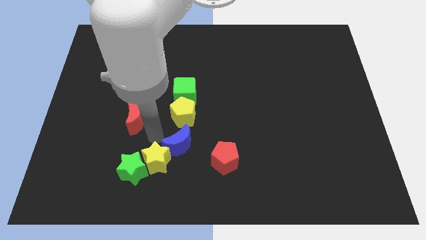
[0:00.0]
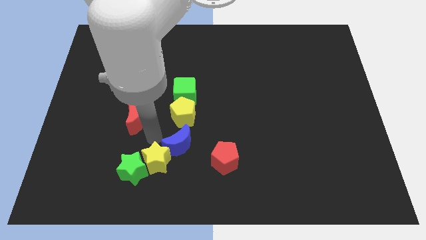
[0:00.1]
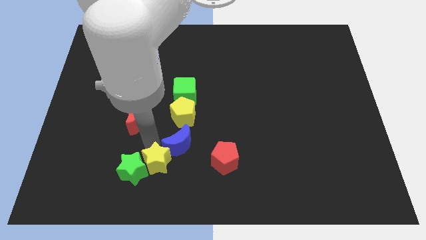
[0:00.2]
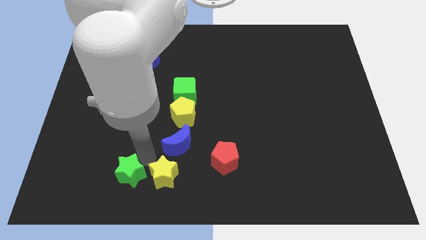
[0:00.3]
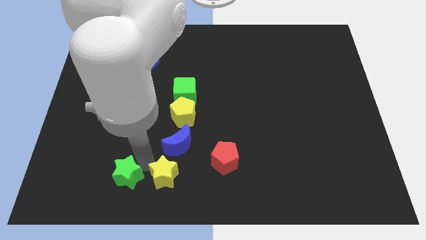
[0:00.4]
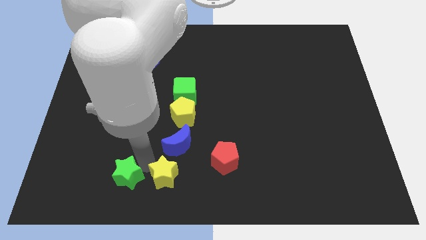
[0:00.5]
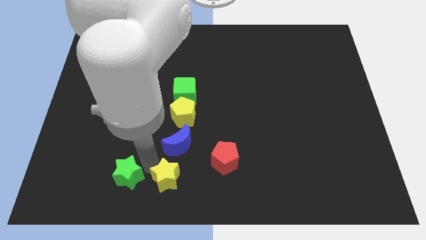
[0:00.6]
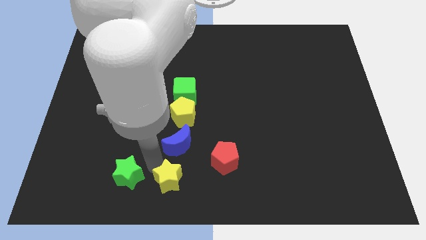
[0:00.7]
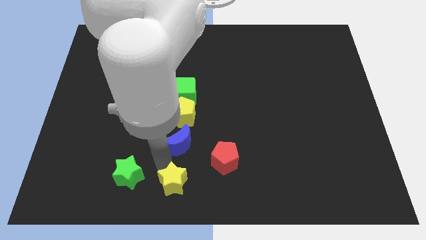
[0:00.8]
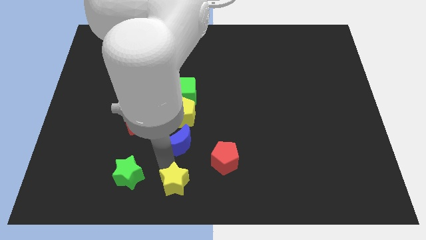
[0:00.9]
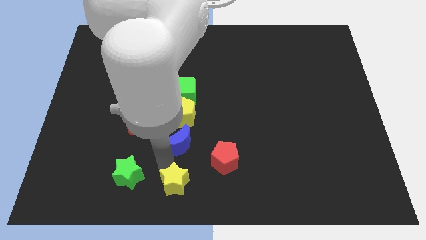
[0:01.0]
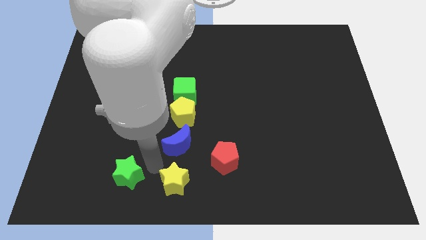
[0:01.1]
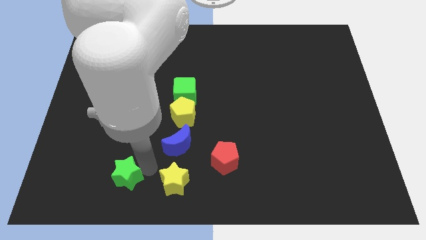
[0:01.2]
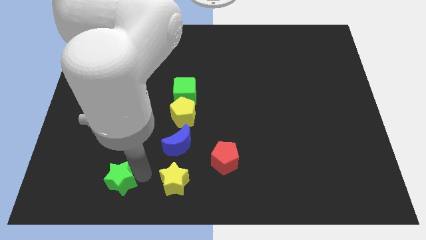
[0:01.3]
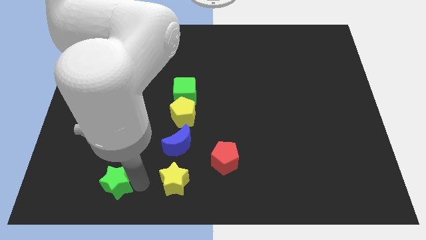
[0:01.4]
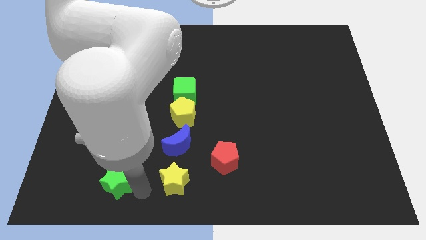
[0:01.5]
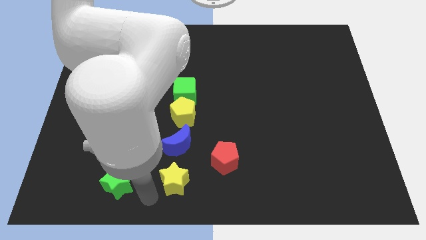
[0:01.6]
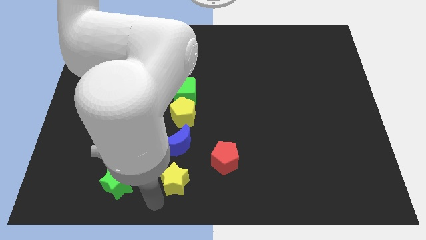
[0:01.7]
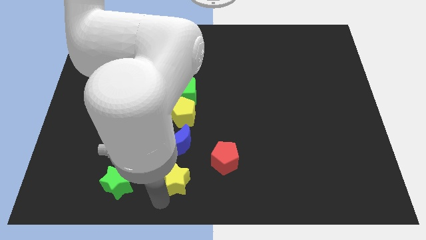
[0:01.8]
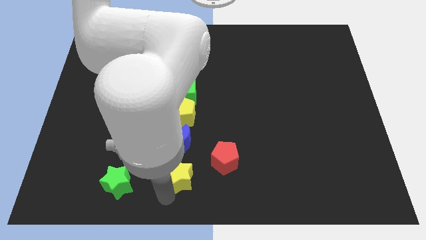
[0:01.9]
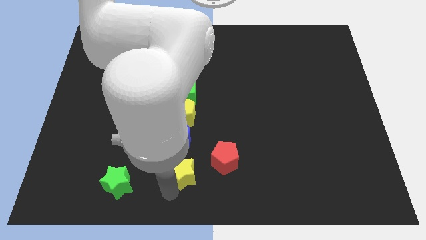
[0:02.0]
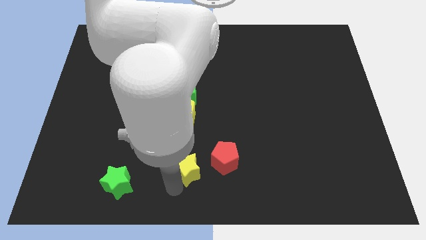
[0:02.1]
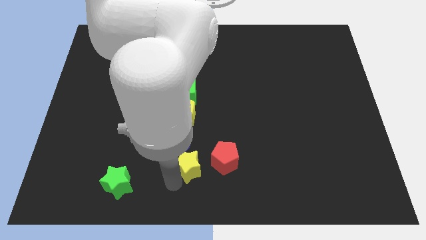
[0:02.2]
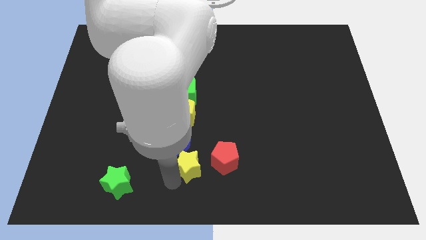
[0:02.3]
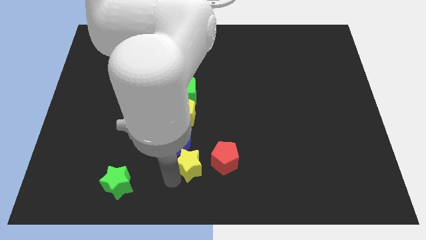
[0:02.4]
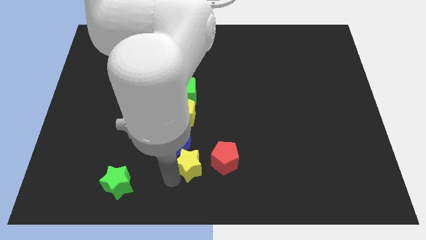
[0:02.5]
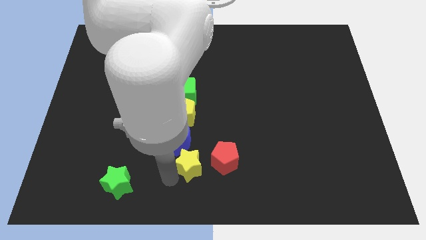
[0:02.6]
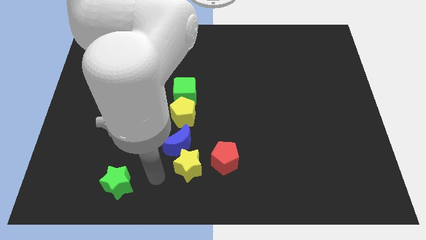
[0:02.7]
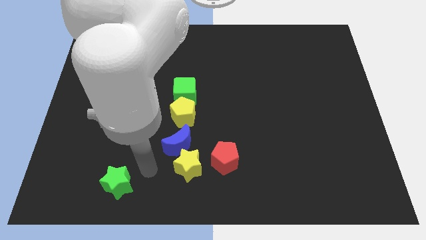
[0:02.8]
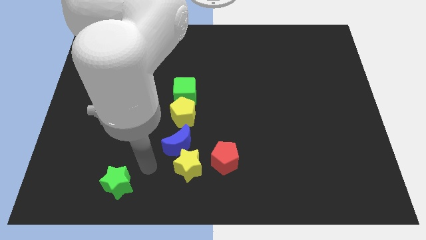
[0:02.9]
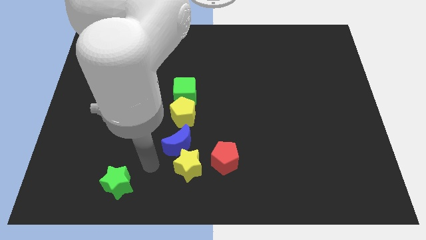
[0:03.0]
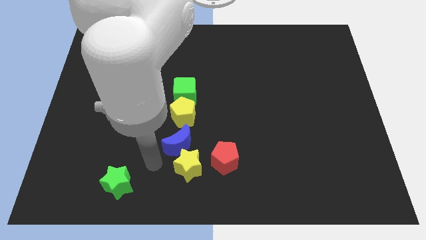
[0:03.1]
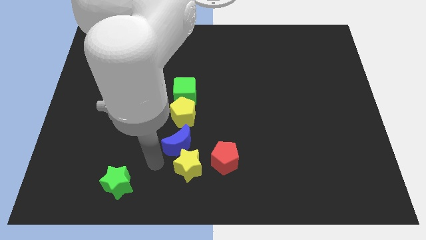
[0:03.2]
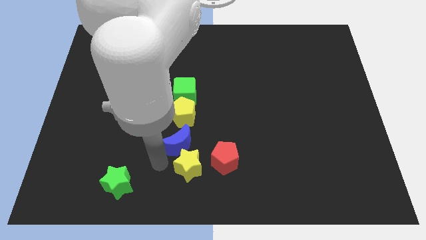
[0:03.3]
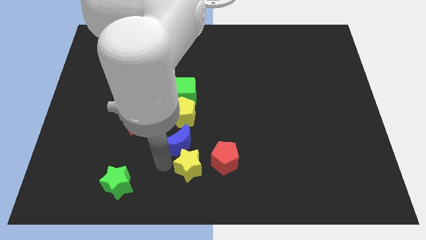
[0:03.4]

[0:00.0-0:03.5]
push the yellow star left to the red pentagon

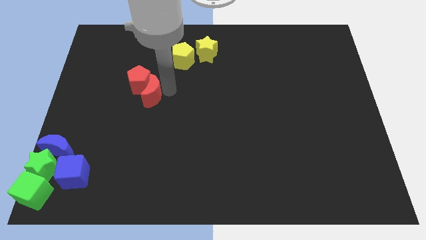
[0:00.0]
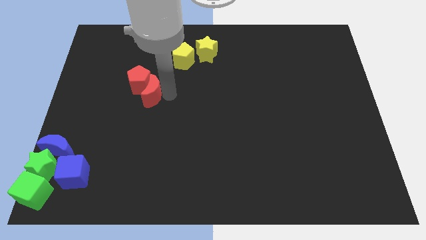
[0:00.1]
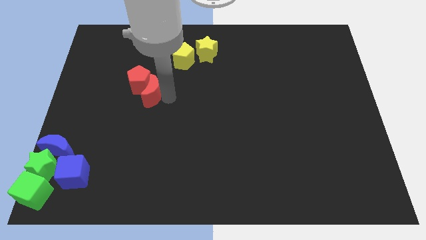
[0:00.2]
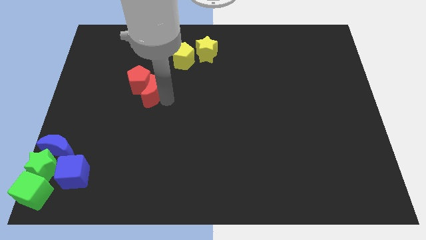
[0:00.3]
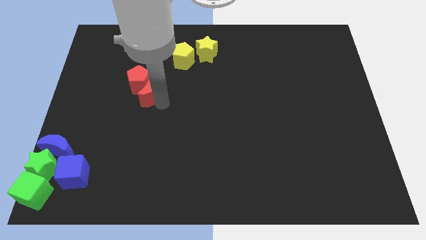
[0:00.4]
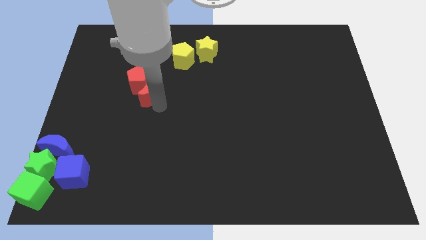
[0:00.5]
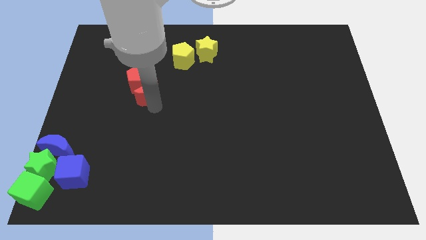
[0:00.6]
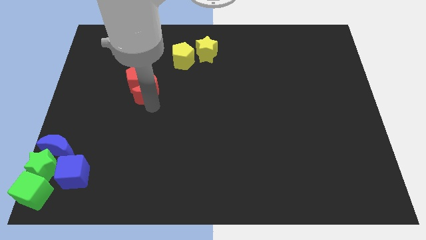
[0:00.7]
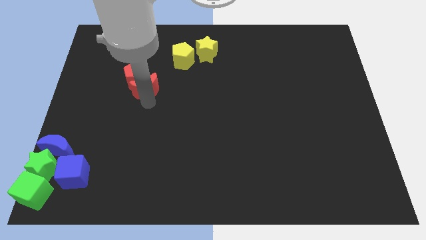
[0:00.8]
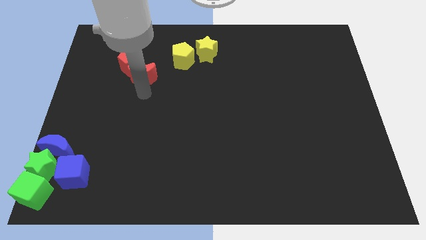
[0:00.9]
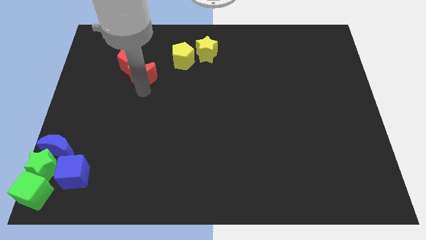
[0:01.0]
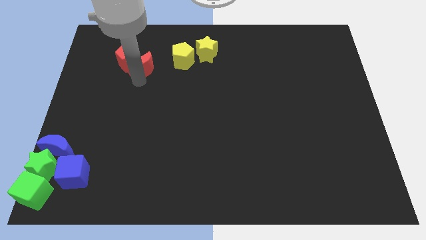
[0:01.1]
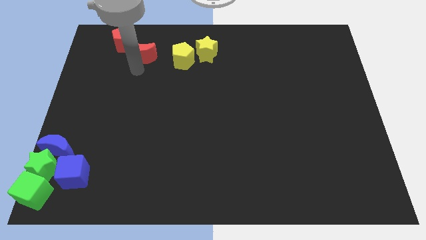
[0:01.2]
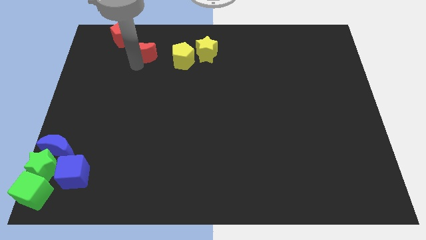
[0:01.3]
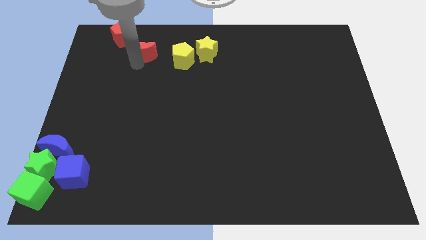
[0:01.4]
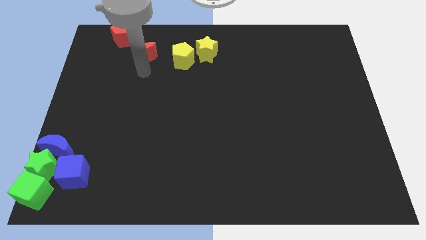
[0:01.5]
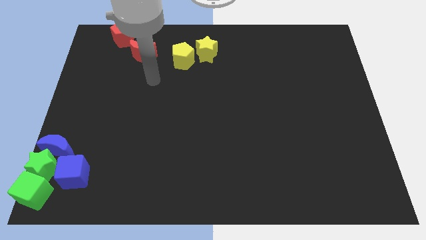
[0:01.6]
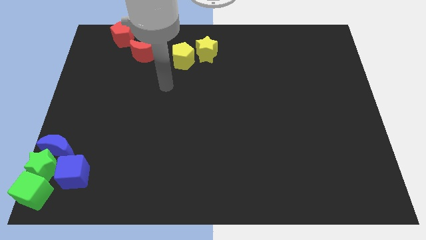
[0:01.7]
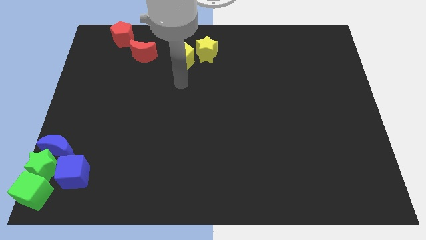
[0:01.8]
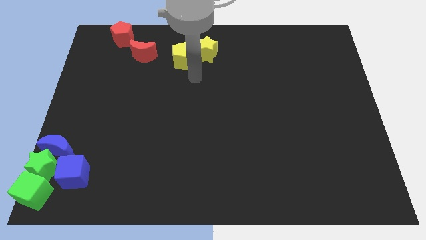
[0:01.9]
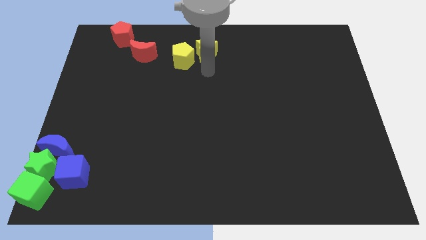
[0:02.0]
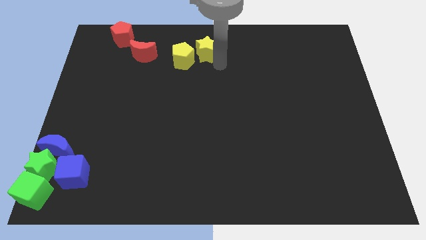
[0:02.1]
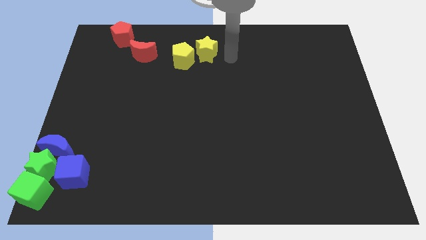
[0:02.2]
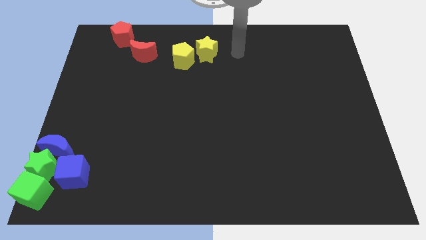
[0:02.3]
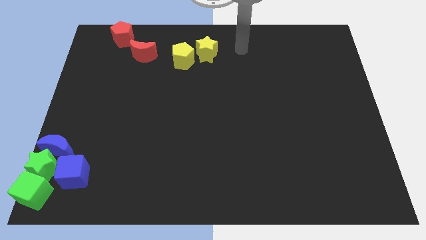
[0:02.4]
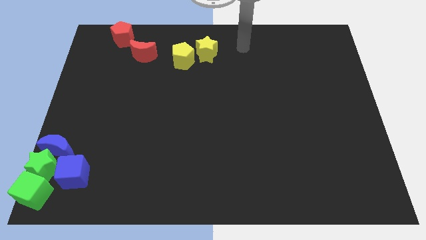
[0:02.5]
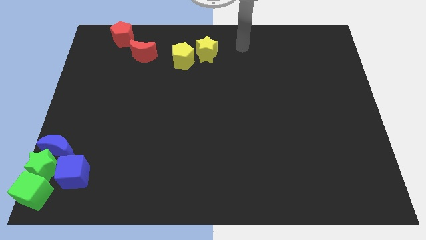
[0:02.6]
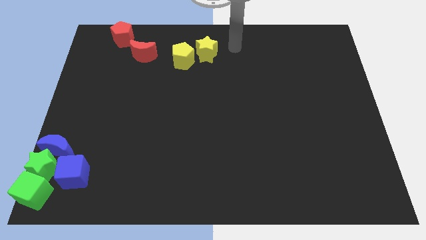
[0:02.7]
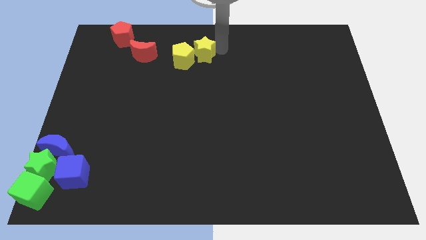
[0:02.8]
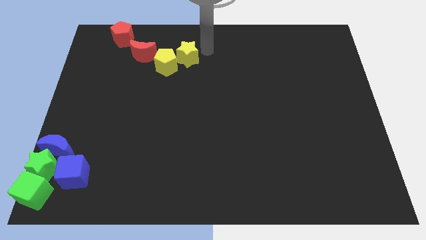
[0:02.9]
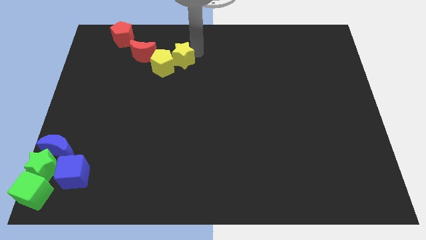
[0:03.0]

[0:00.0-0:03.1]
push the red moon along with the red pentagon towards the top side

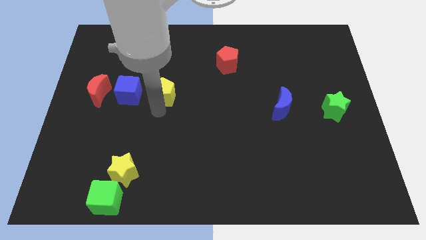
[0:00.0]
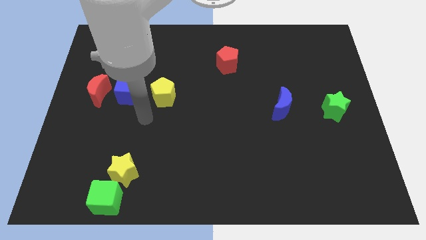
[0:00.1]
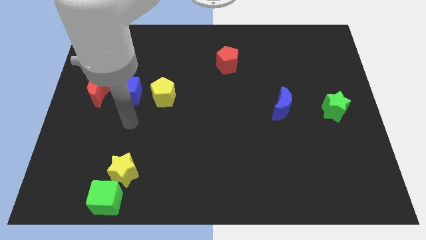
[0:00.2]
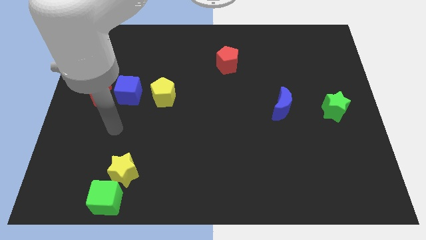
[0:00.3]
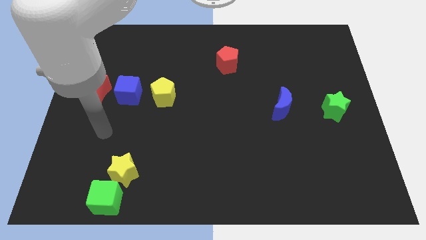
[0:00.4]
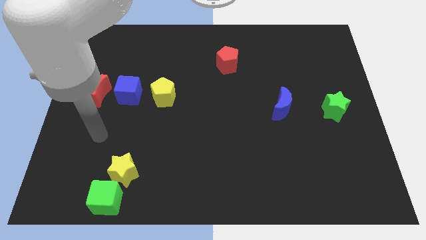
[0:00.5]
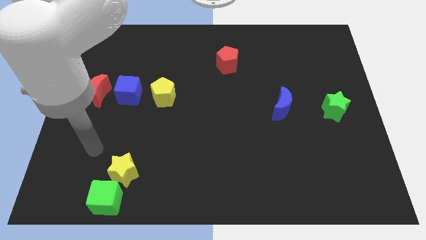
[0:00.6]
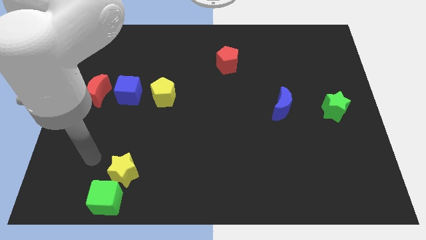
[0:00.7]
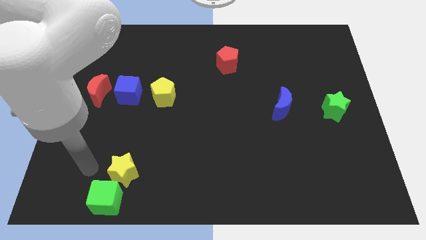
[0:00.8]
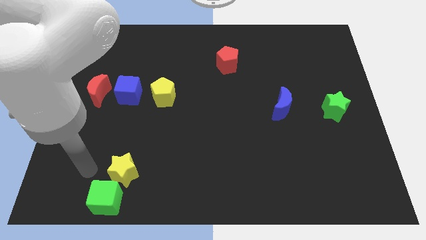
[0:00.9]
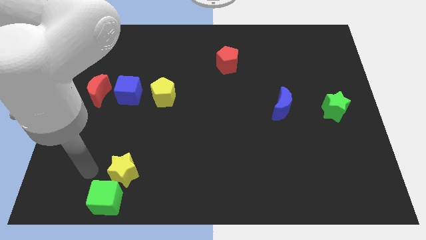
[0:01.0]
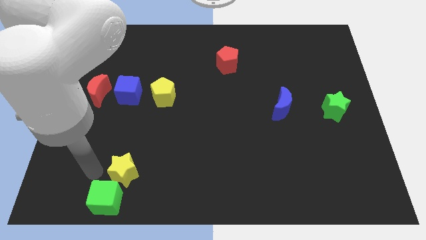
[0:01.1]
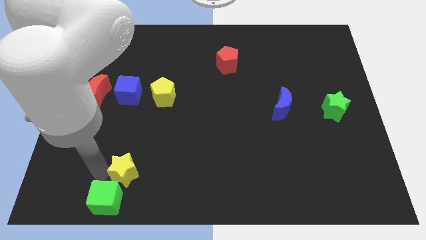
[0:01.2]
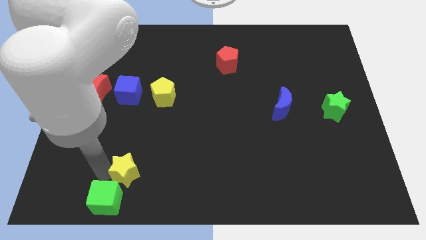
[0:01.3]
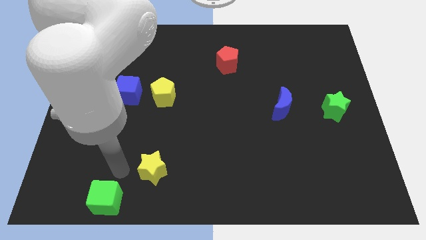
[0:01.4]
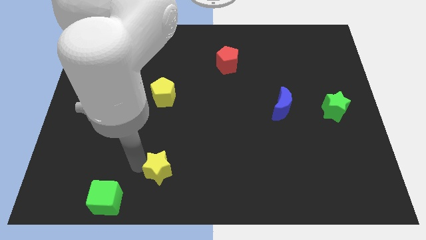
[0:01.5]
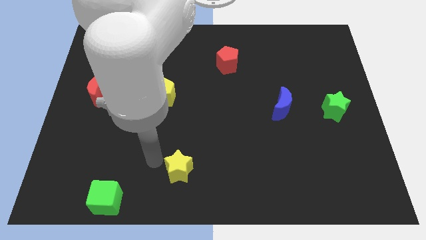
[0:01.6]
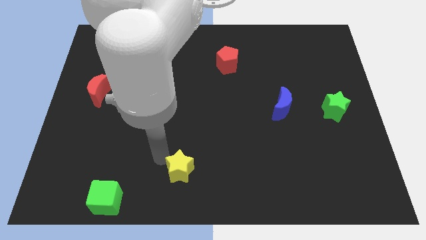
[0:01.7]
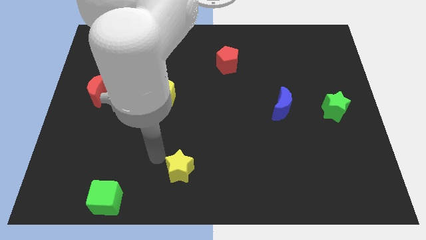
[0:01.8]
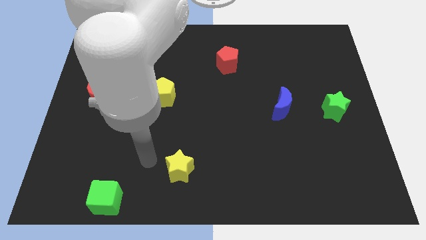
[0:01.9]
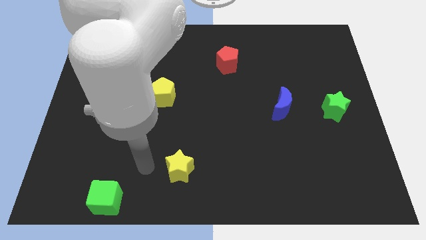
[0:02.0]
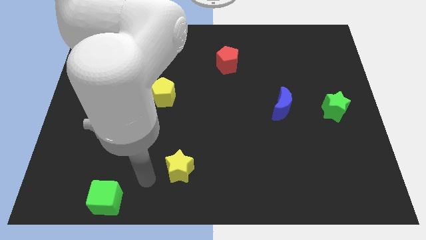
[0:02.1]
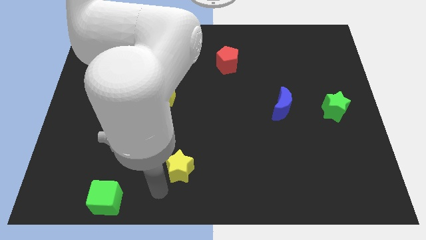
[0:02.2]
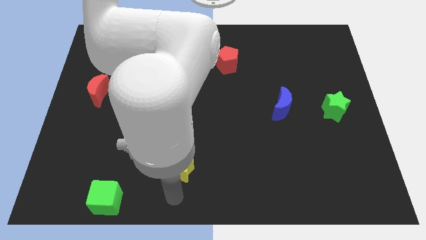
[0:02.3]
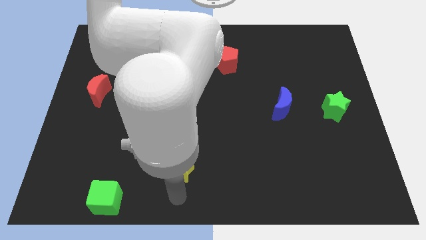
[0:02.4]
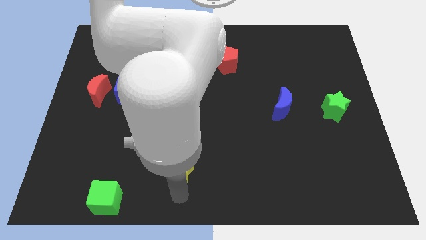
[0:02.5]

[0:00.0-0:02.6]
move the yellow star away from the green cube
